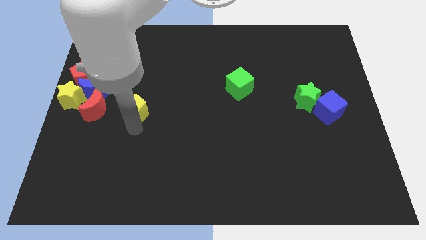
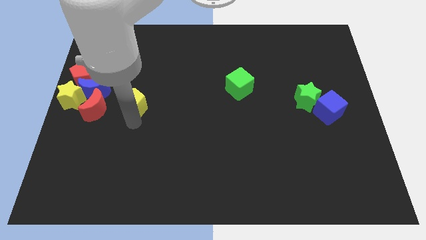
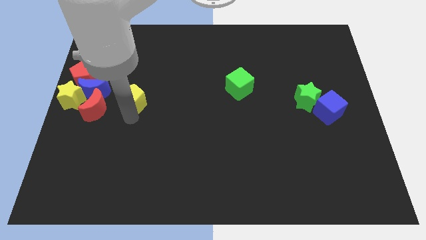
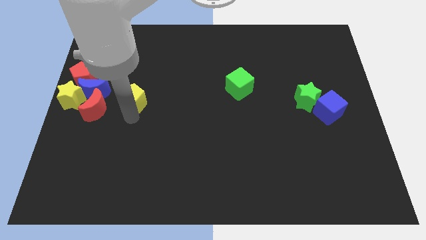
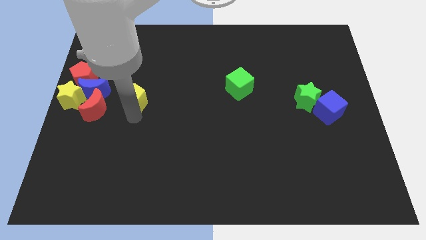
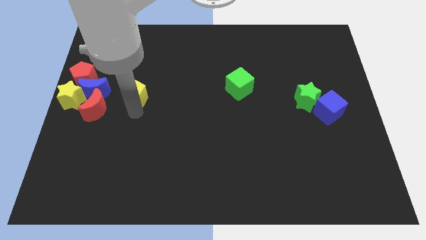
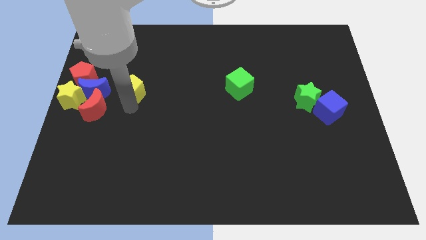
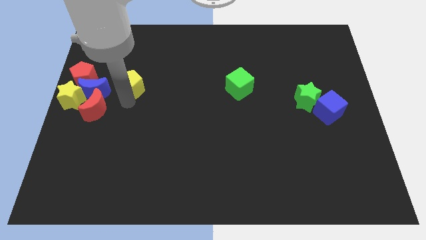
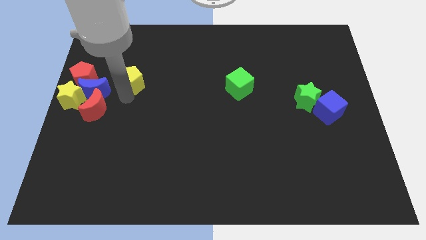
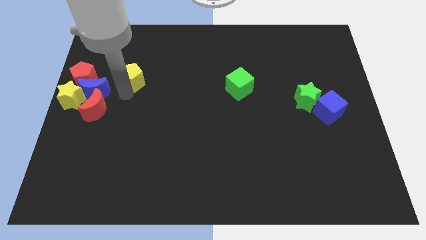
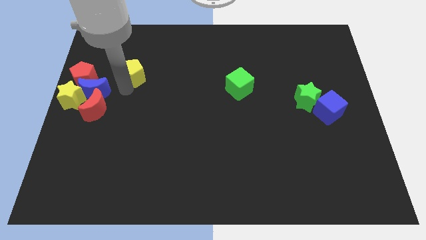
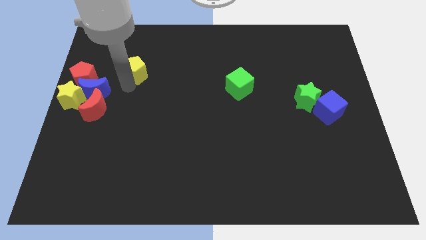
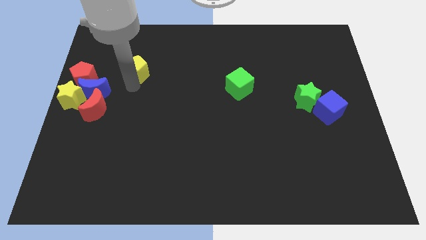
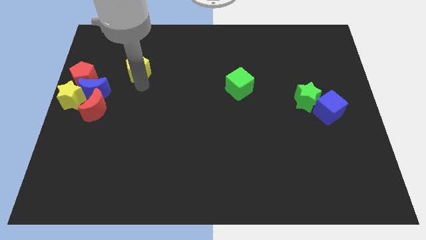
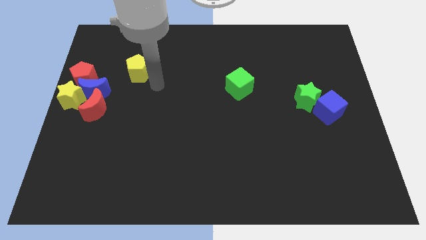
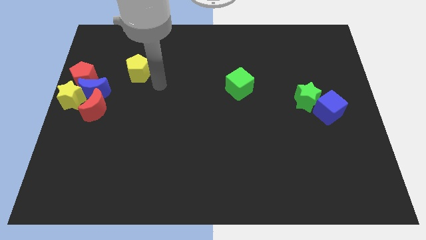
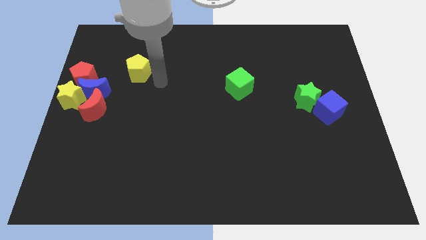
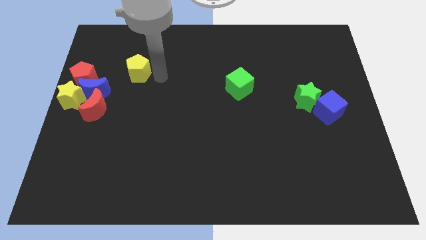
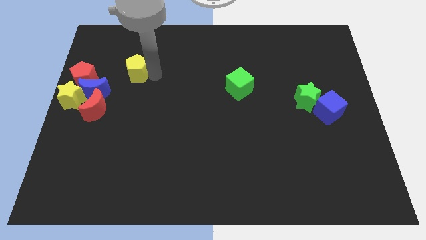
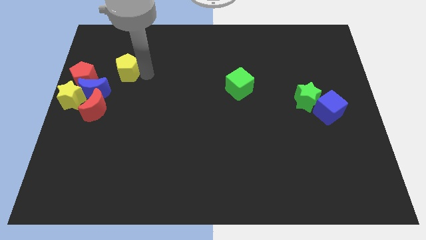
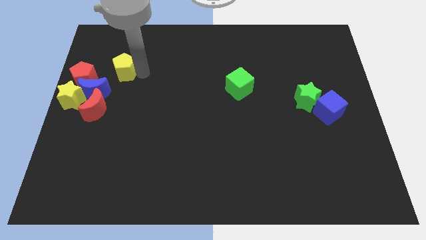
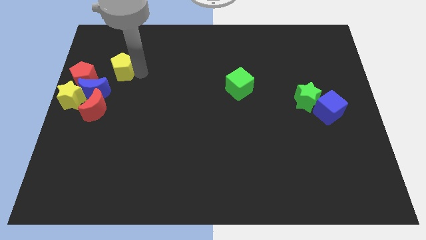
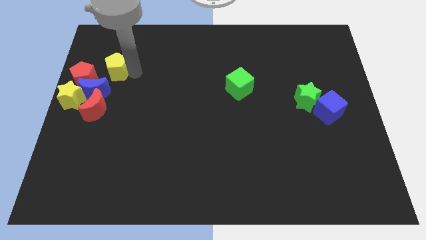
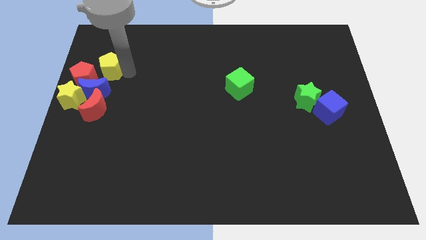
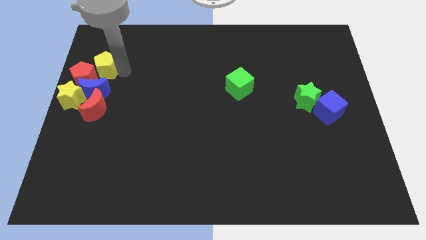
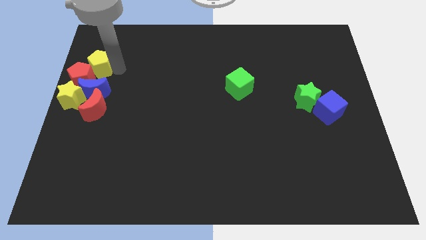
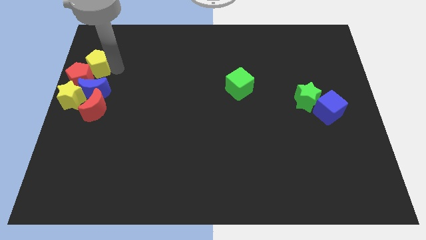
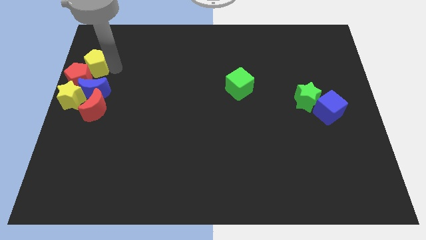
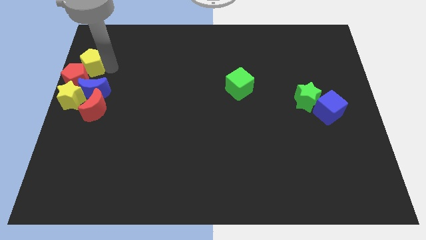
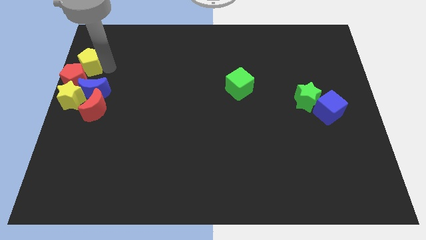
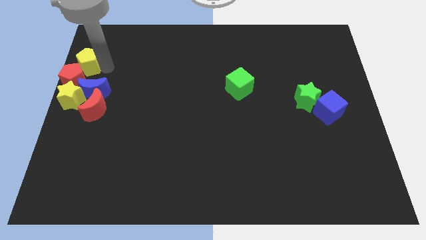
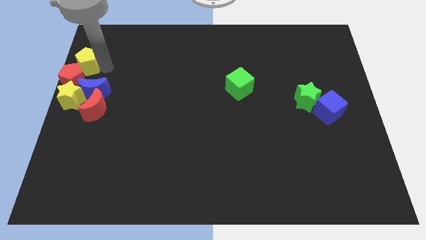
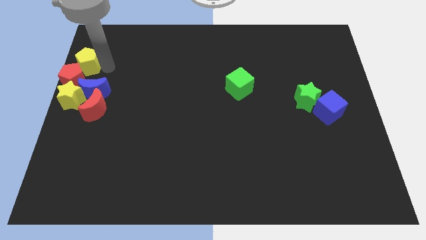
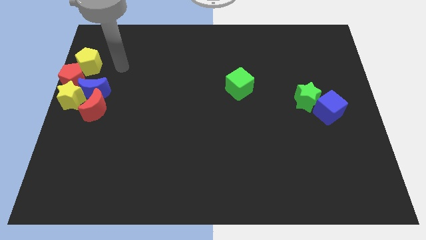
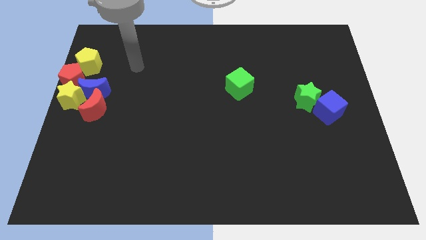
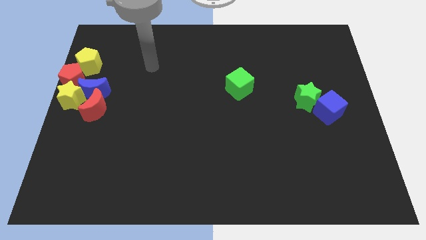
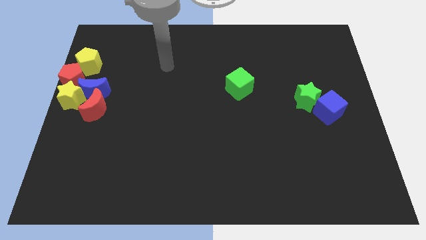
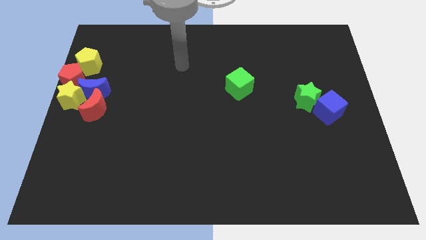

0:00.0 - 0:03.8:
place the yellow pentagon at the top side of the red pentagon

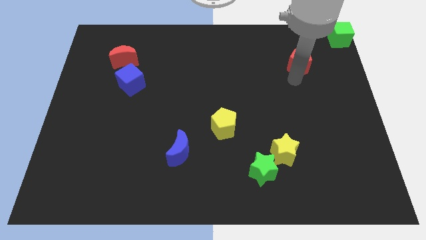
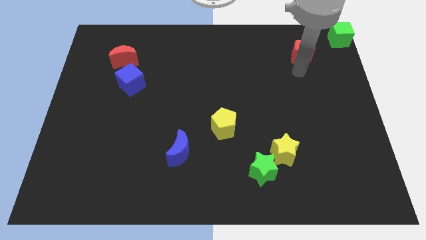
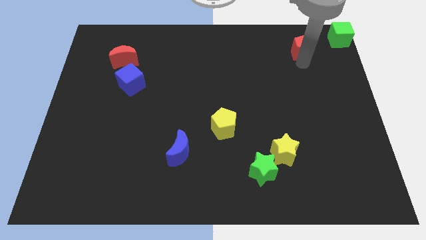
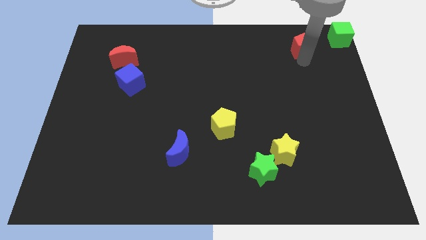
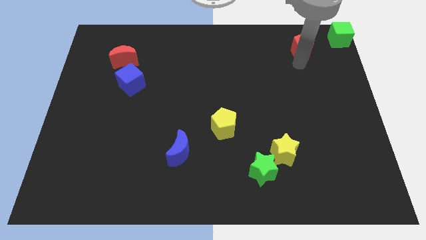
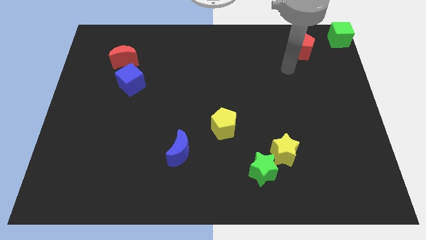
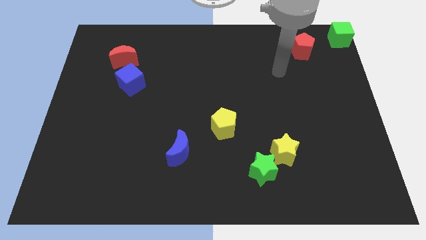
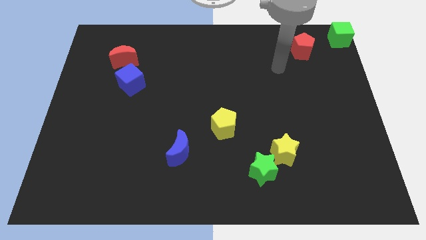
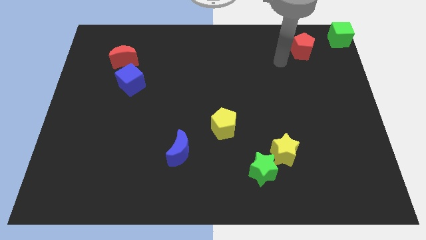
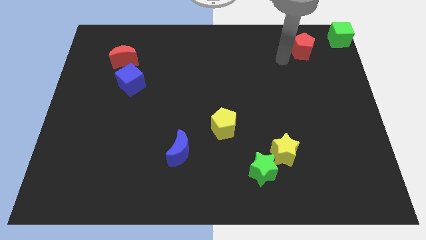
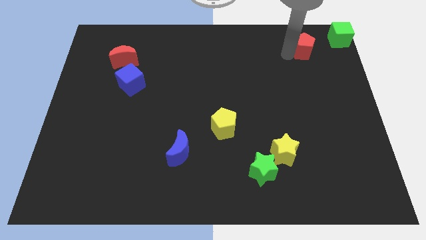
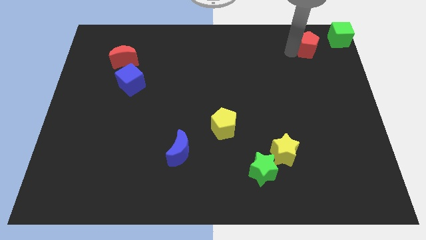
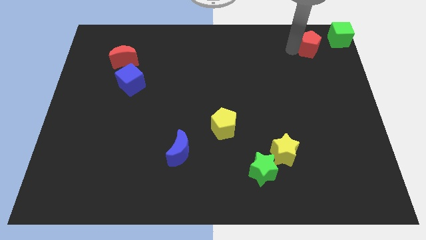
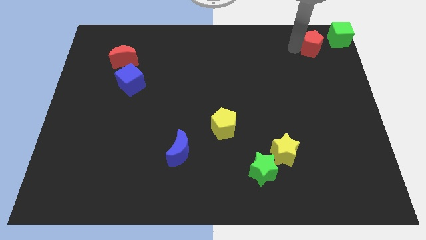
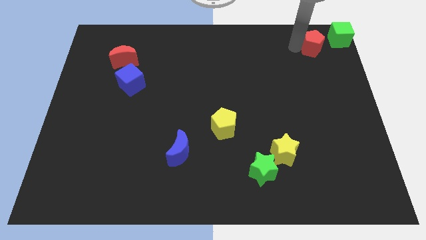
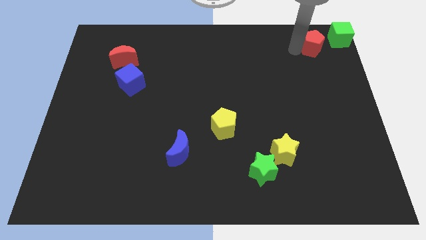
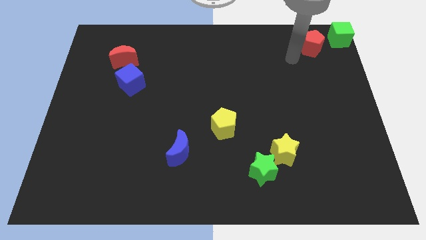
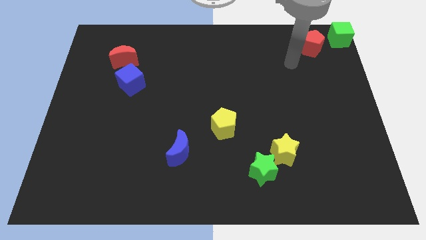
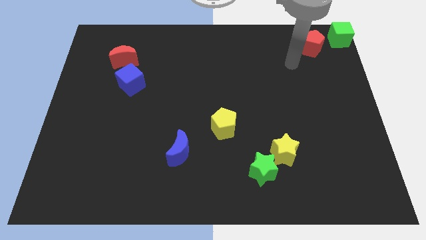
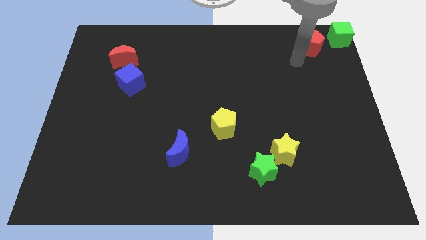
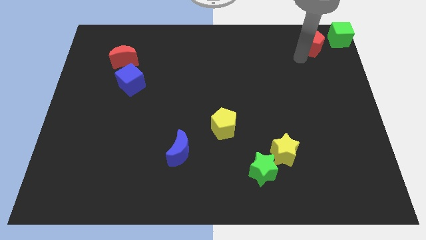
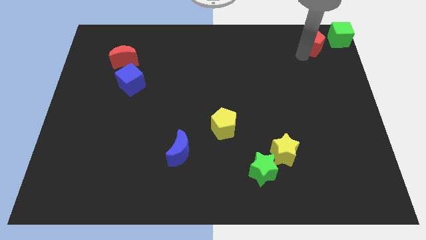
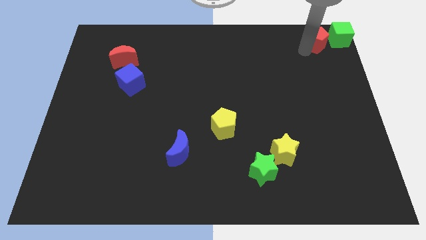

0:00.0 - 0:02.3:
place the red crescent to the left of green block

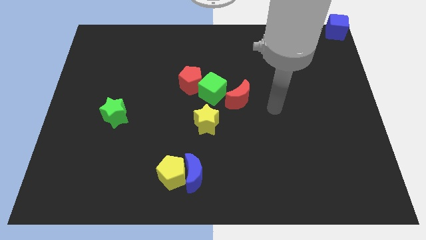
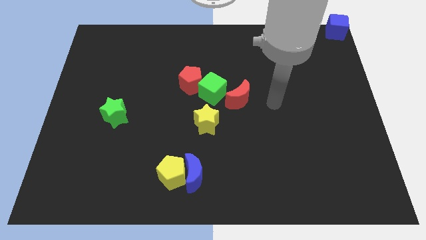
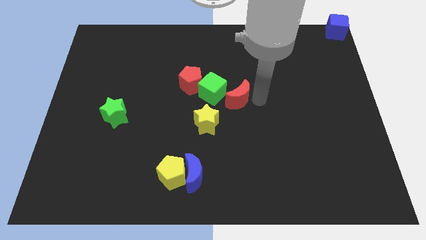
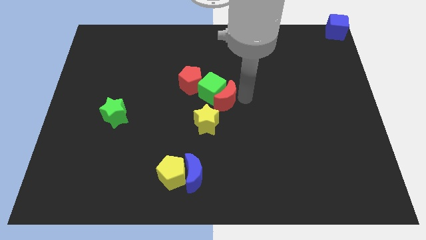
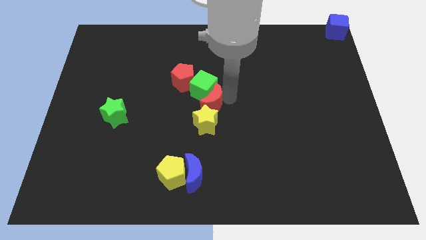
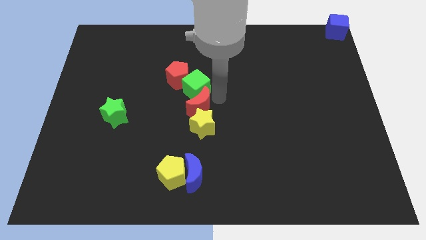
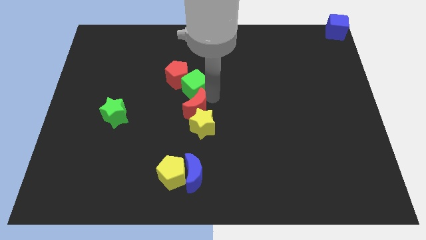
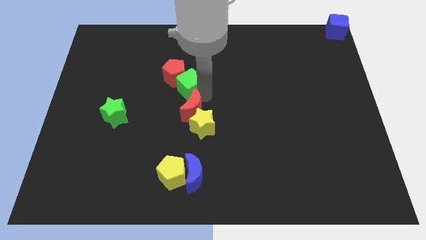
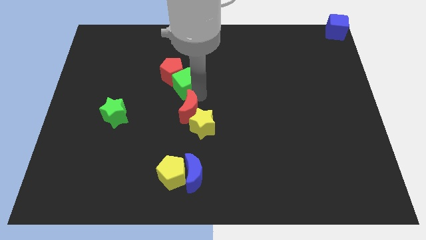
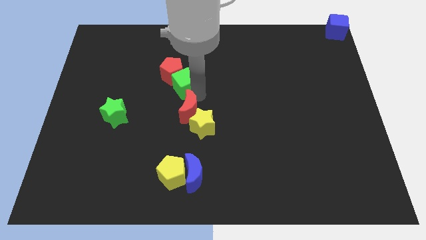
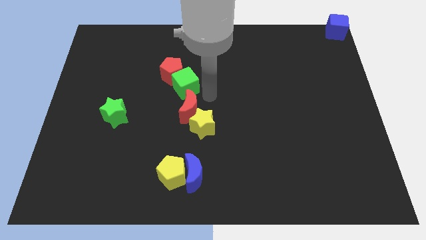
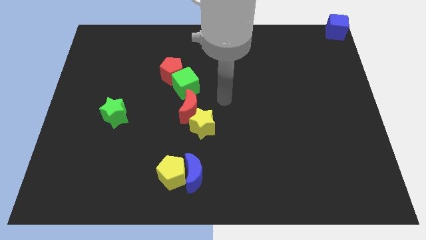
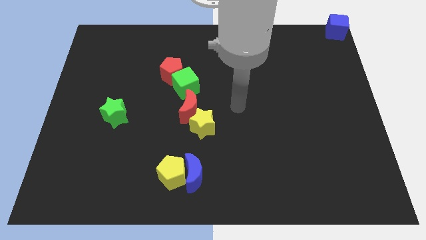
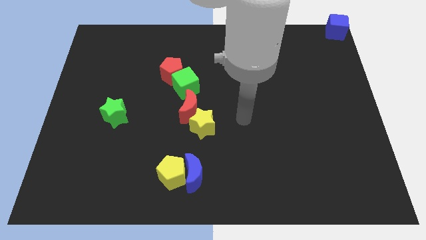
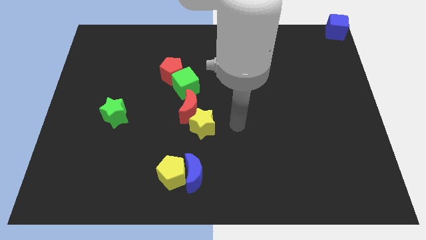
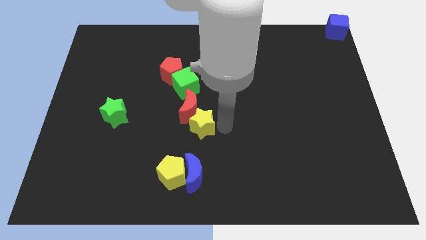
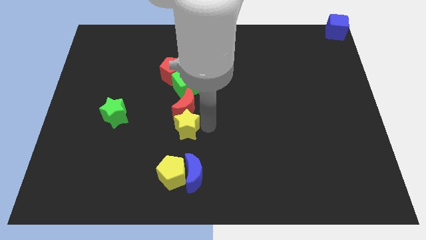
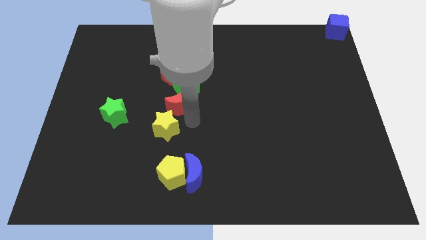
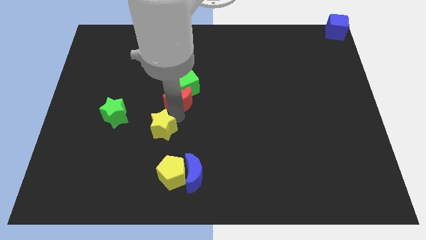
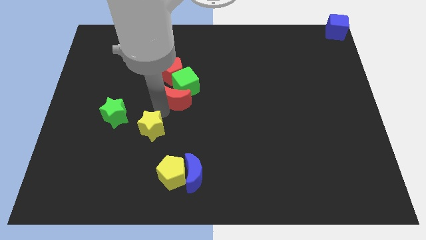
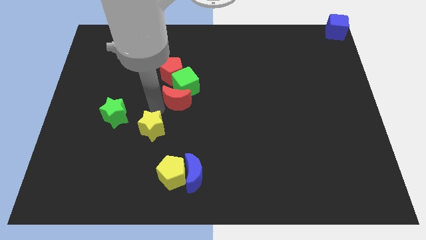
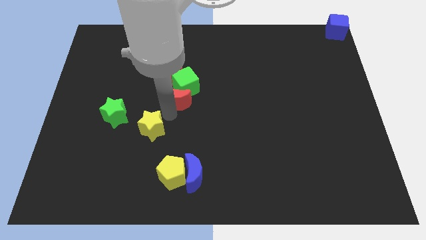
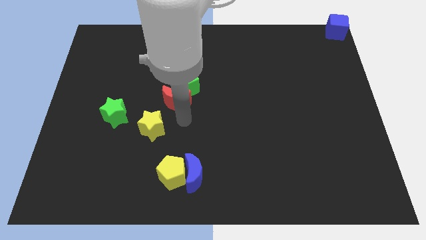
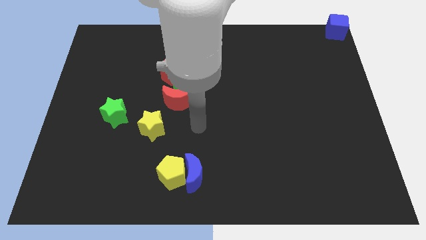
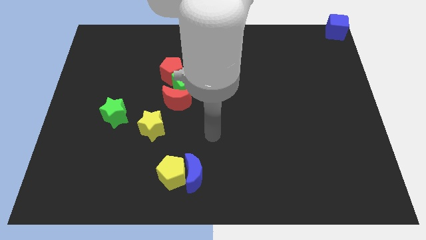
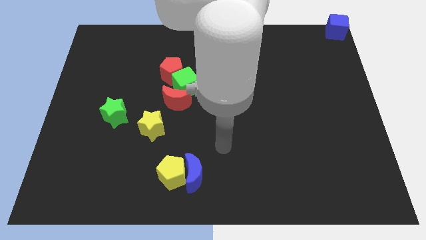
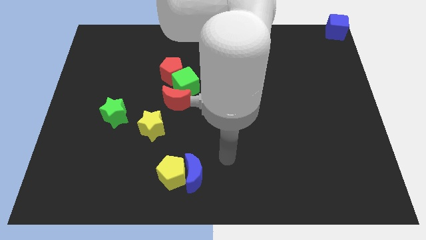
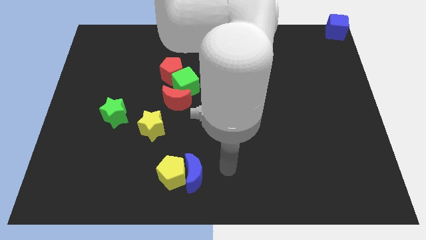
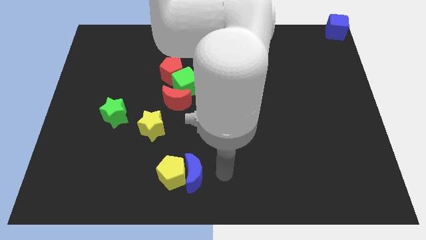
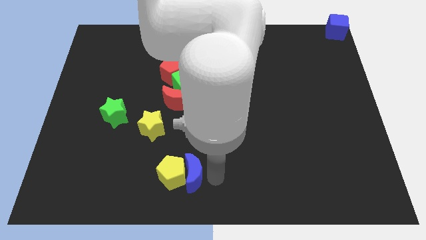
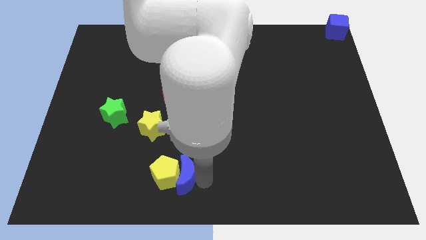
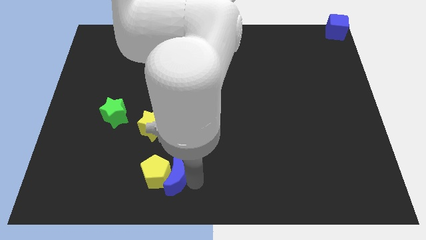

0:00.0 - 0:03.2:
slide the yellow star towards the green star
